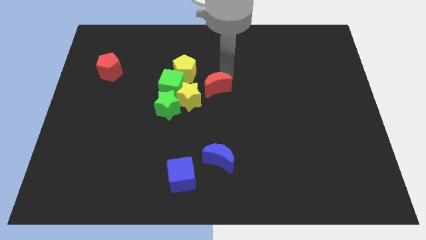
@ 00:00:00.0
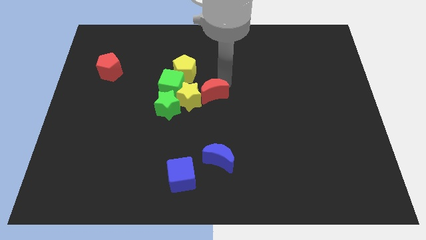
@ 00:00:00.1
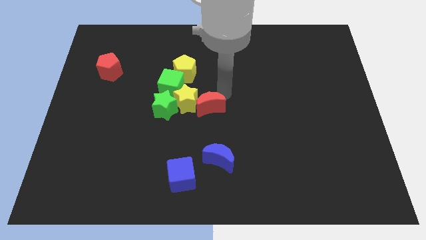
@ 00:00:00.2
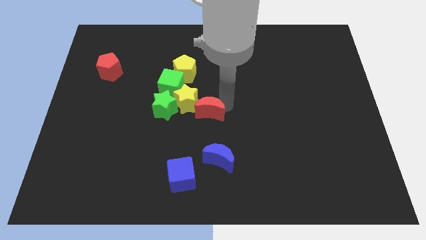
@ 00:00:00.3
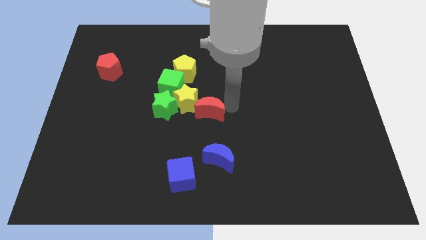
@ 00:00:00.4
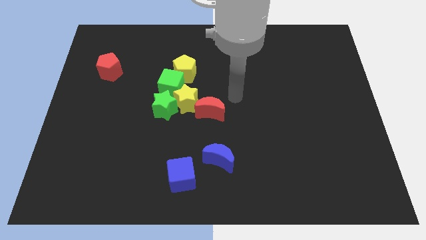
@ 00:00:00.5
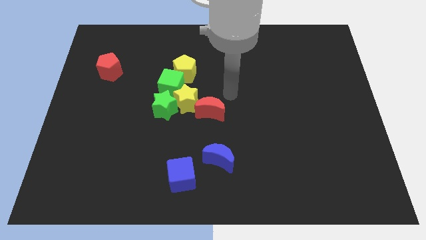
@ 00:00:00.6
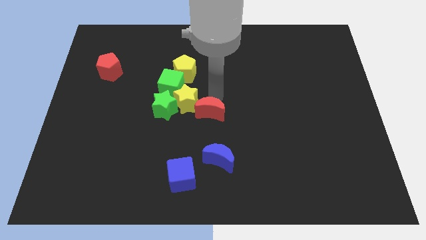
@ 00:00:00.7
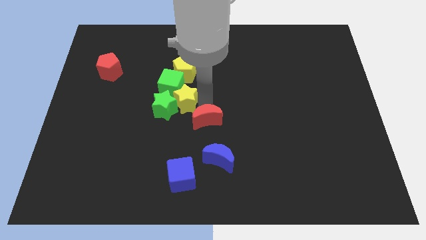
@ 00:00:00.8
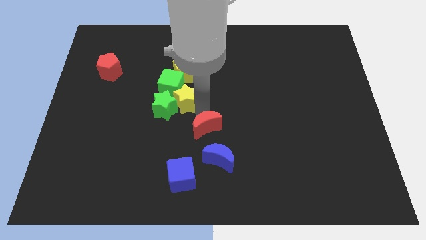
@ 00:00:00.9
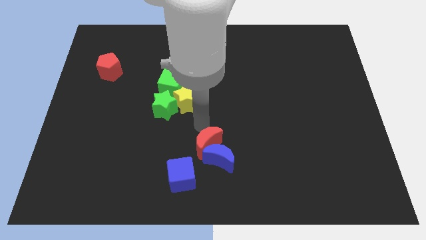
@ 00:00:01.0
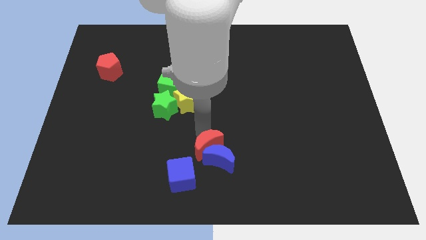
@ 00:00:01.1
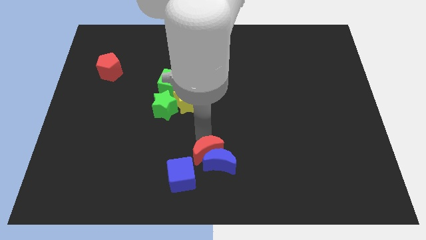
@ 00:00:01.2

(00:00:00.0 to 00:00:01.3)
slide the red crescent into the blue moon

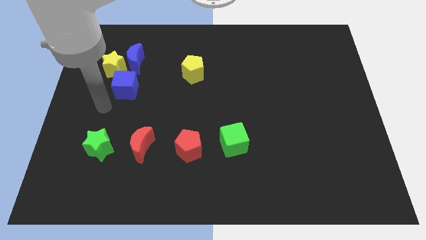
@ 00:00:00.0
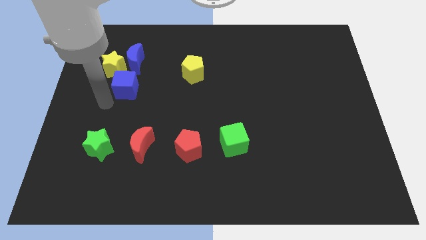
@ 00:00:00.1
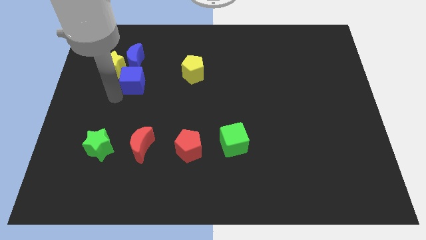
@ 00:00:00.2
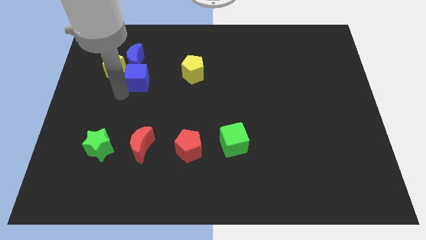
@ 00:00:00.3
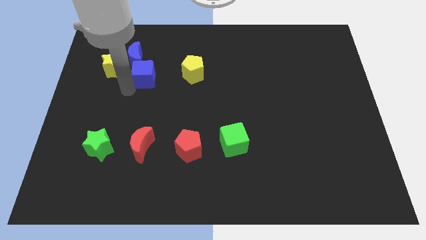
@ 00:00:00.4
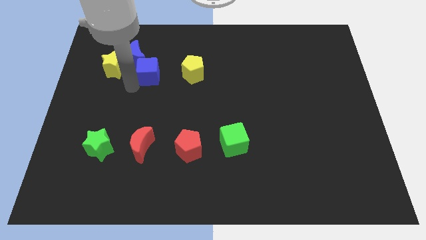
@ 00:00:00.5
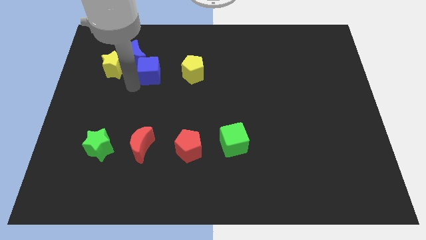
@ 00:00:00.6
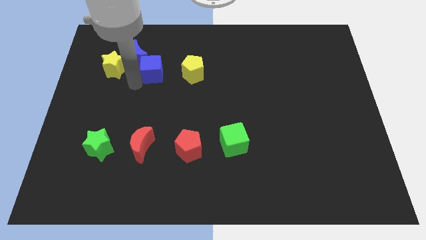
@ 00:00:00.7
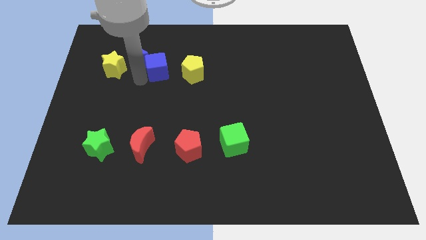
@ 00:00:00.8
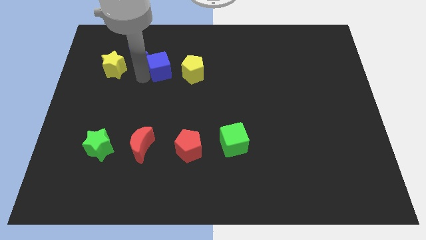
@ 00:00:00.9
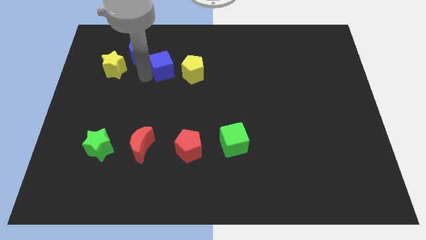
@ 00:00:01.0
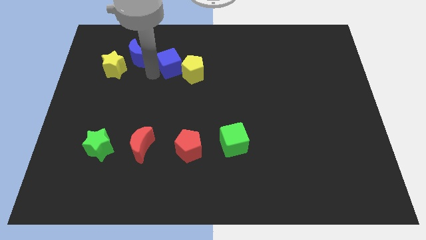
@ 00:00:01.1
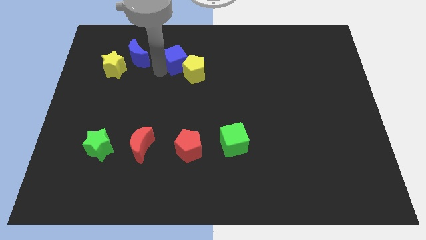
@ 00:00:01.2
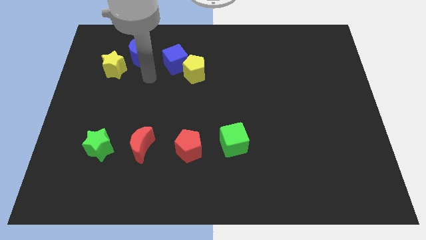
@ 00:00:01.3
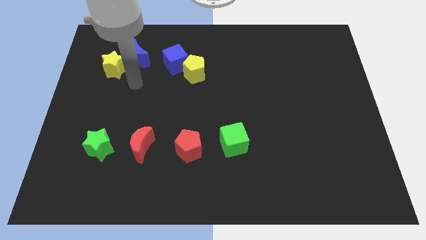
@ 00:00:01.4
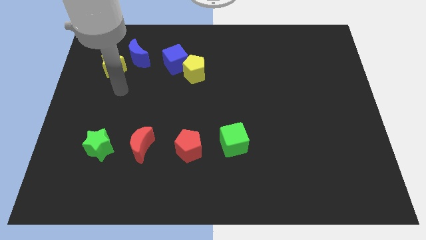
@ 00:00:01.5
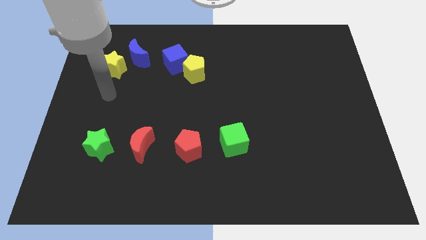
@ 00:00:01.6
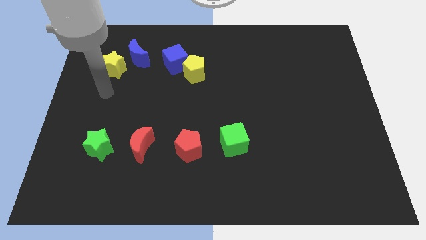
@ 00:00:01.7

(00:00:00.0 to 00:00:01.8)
push the blue cube to the top left side of the yellow pentagon

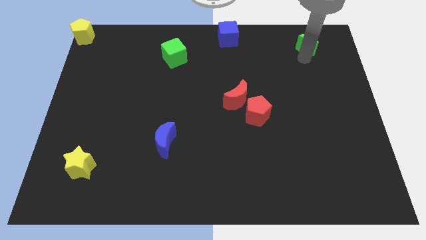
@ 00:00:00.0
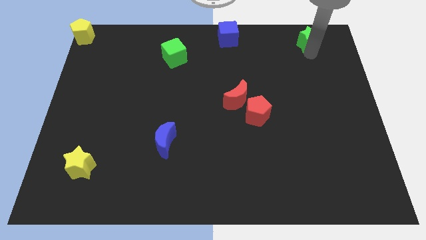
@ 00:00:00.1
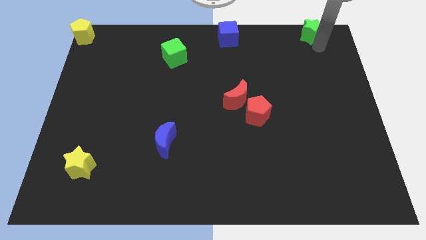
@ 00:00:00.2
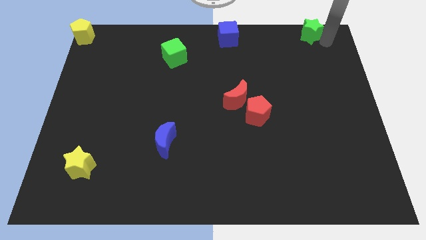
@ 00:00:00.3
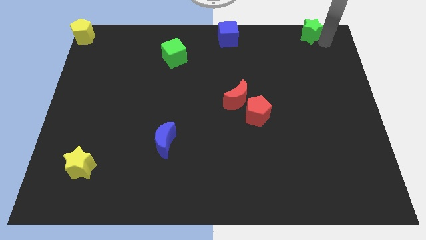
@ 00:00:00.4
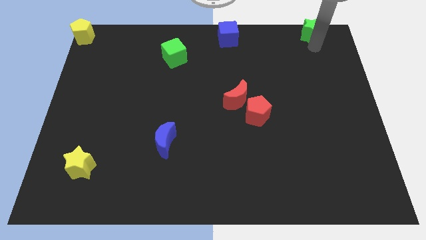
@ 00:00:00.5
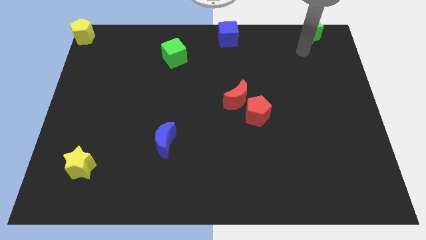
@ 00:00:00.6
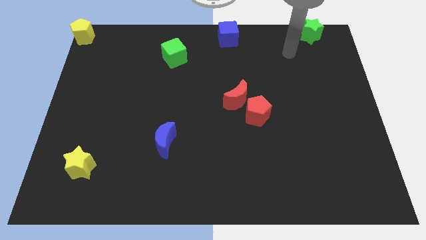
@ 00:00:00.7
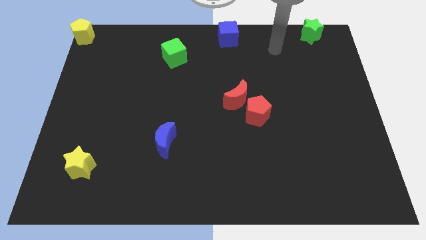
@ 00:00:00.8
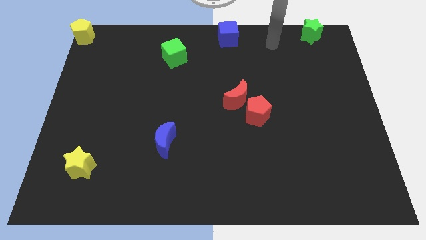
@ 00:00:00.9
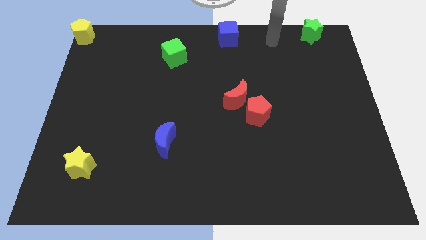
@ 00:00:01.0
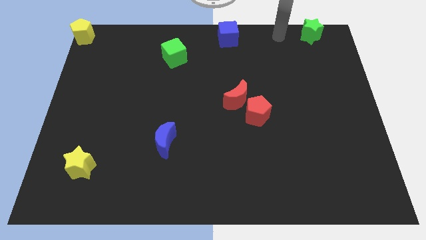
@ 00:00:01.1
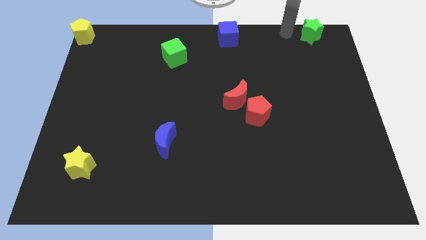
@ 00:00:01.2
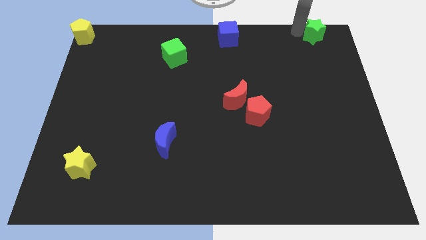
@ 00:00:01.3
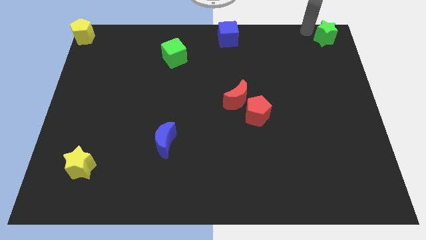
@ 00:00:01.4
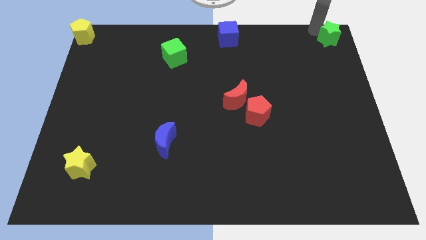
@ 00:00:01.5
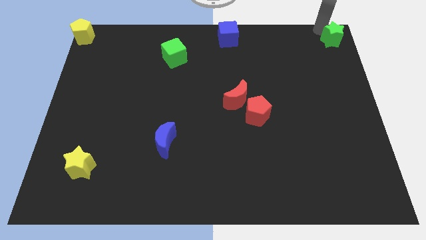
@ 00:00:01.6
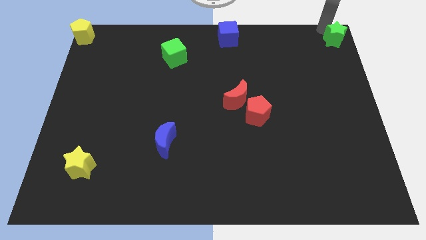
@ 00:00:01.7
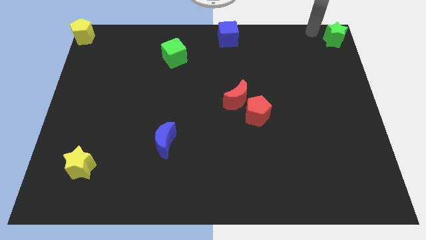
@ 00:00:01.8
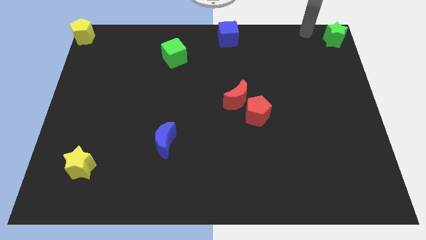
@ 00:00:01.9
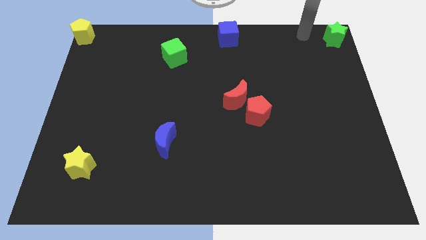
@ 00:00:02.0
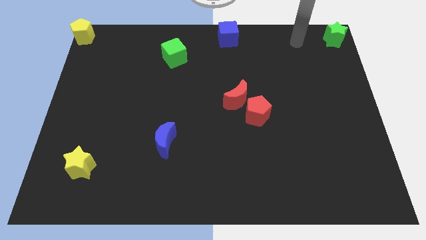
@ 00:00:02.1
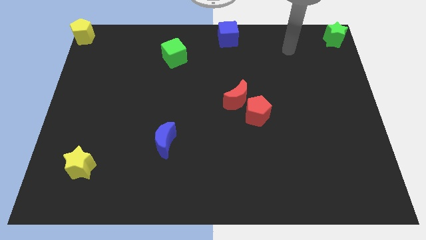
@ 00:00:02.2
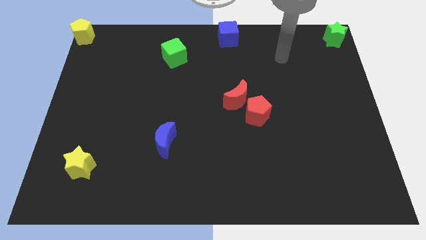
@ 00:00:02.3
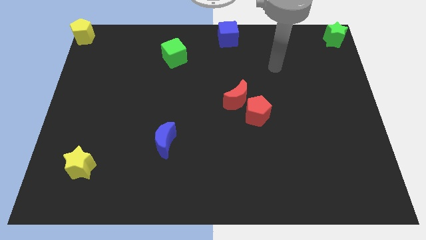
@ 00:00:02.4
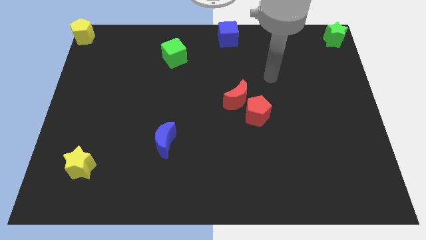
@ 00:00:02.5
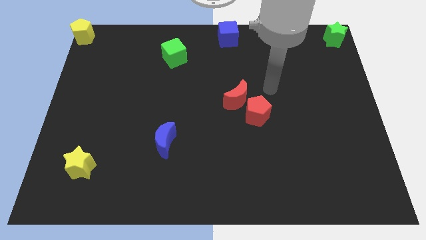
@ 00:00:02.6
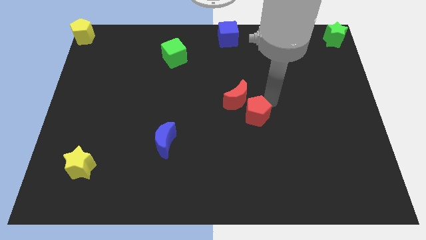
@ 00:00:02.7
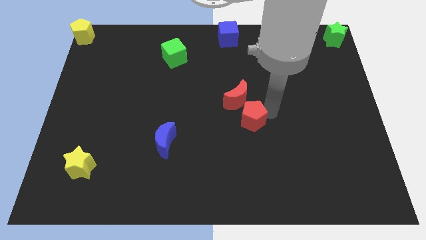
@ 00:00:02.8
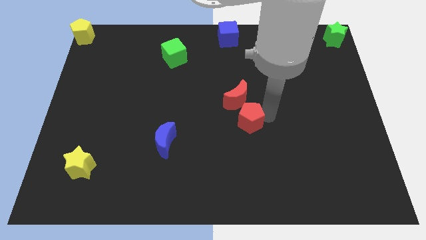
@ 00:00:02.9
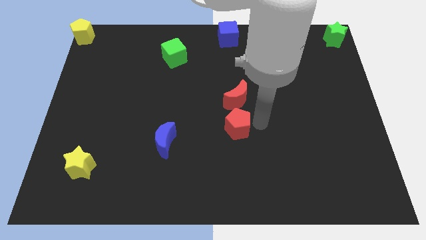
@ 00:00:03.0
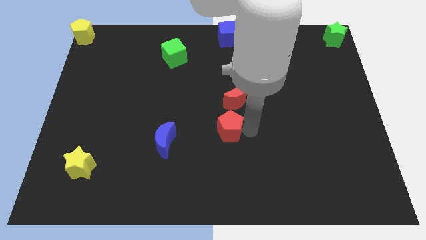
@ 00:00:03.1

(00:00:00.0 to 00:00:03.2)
push red pentagon below red crescent

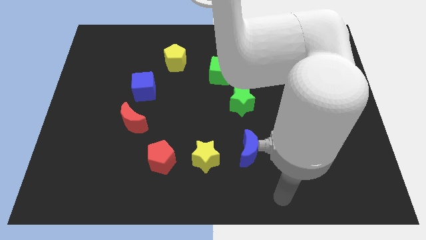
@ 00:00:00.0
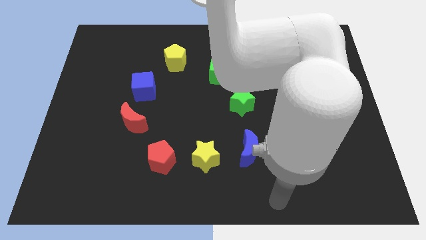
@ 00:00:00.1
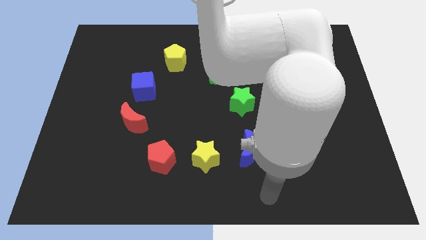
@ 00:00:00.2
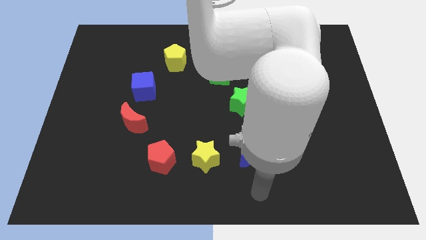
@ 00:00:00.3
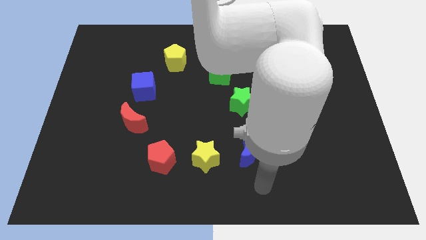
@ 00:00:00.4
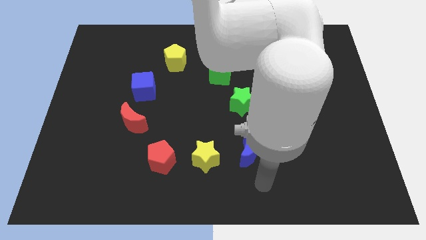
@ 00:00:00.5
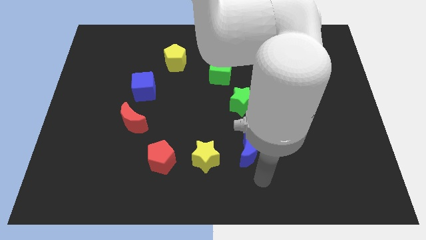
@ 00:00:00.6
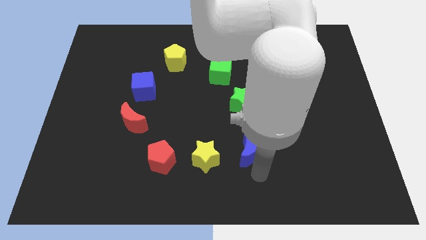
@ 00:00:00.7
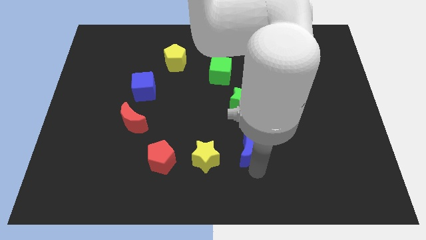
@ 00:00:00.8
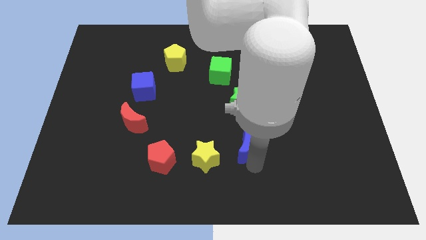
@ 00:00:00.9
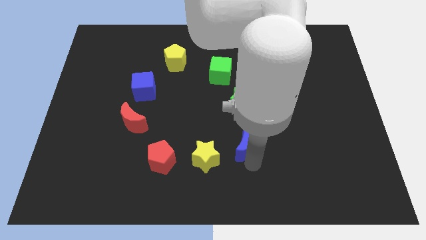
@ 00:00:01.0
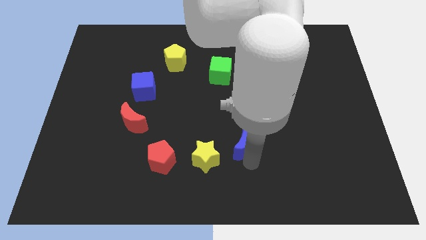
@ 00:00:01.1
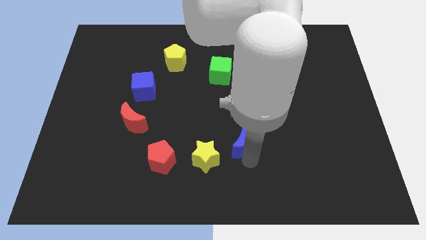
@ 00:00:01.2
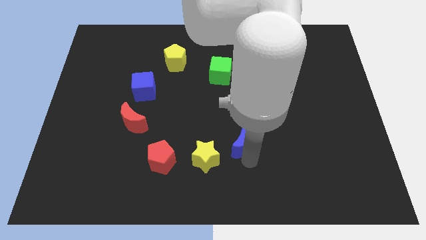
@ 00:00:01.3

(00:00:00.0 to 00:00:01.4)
touch the bottom of the blue crescent

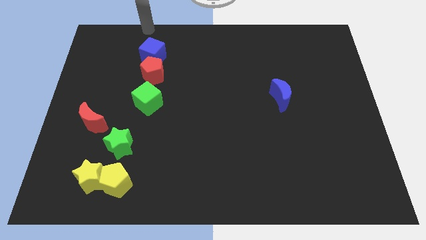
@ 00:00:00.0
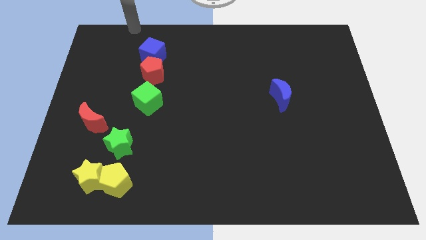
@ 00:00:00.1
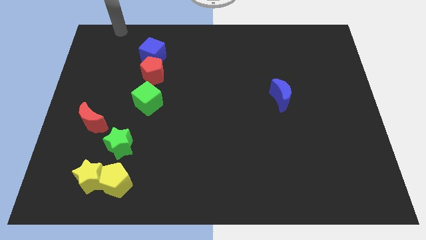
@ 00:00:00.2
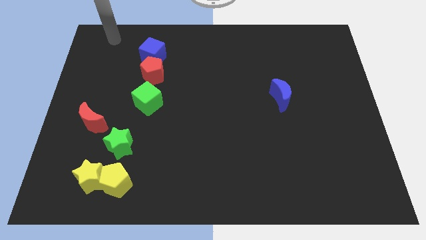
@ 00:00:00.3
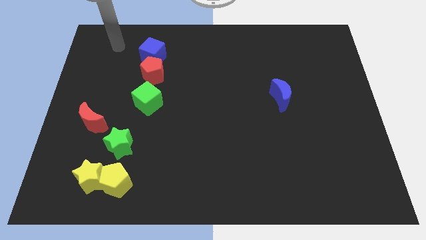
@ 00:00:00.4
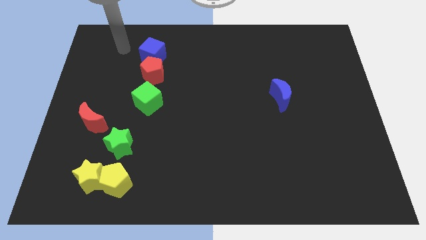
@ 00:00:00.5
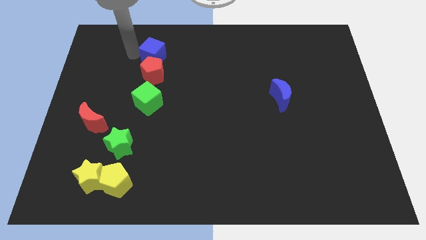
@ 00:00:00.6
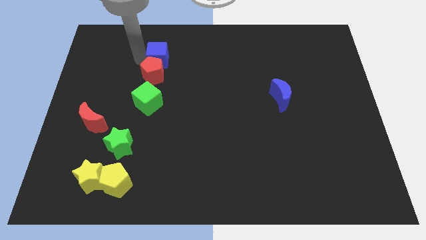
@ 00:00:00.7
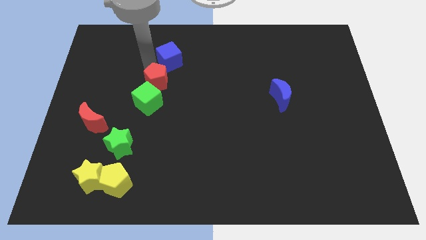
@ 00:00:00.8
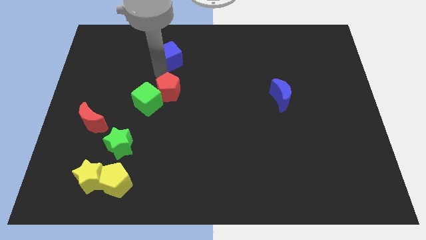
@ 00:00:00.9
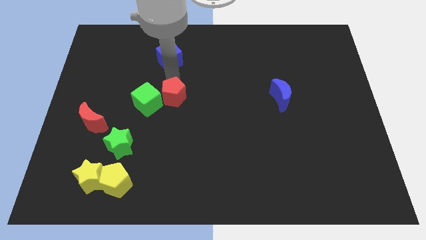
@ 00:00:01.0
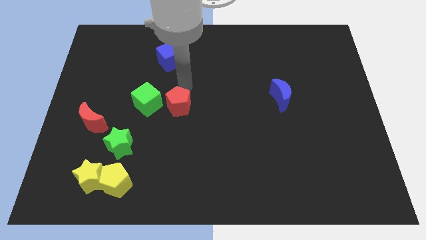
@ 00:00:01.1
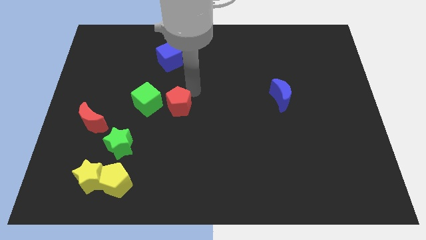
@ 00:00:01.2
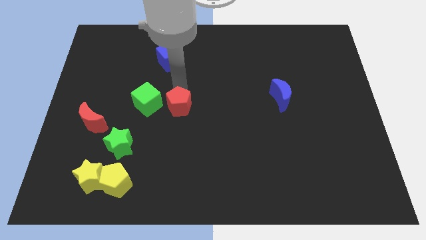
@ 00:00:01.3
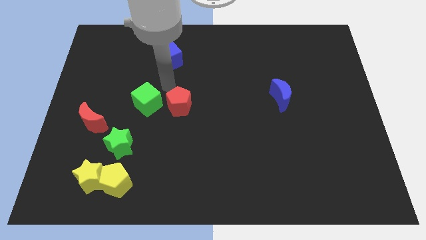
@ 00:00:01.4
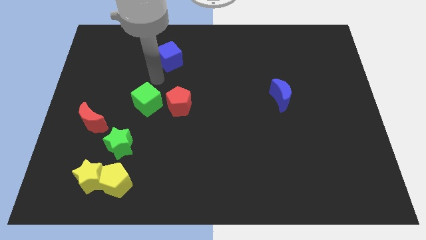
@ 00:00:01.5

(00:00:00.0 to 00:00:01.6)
separate the red pentagon from the blue cube
